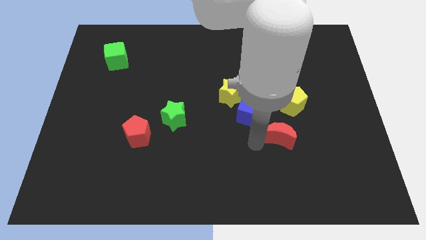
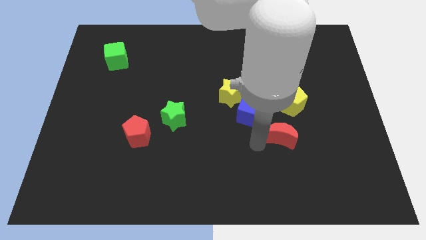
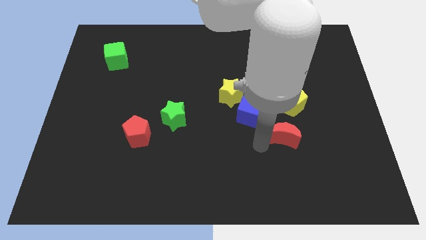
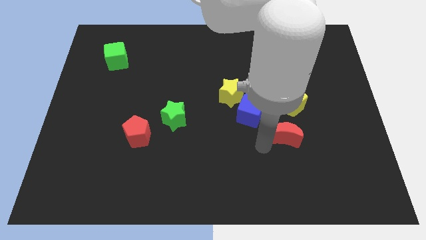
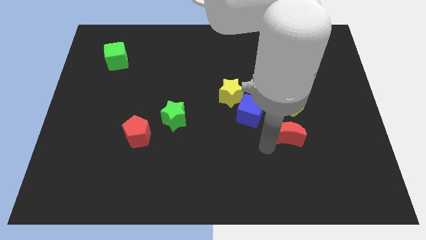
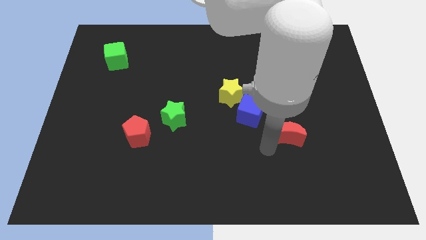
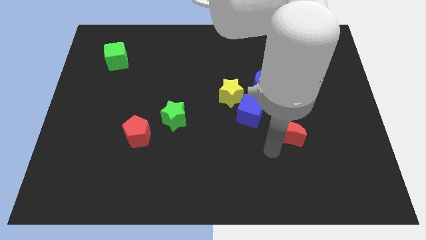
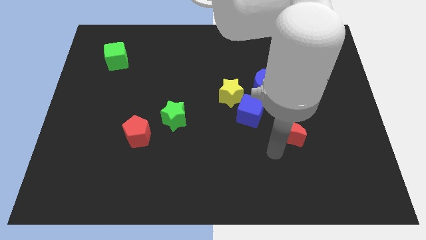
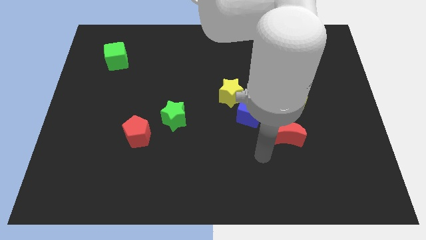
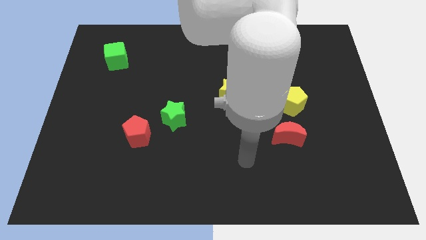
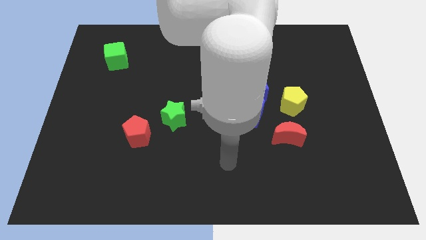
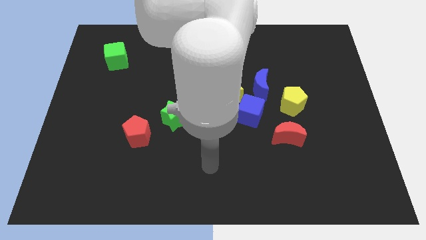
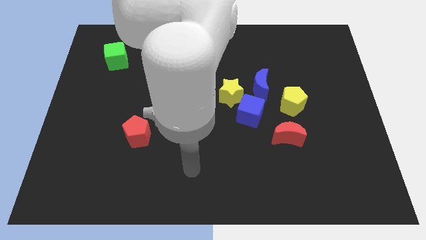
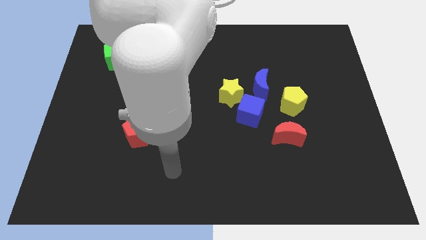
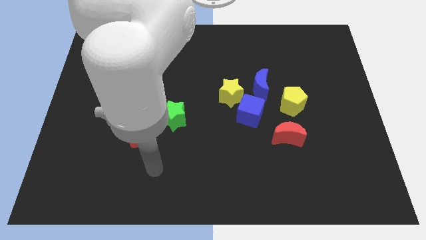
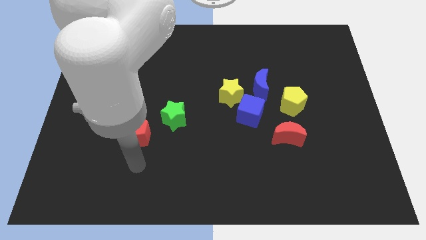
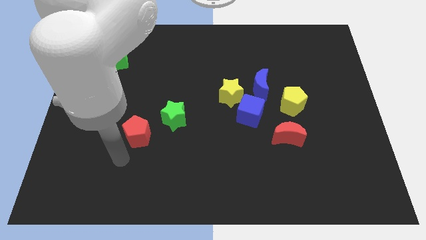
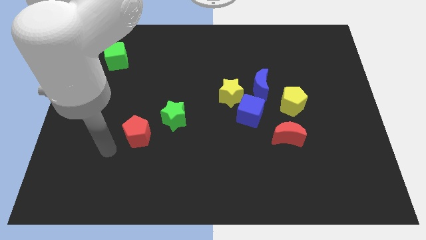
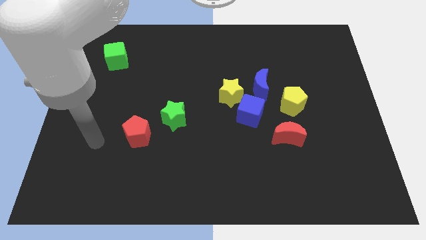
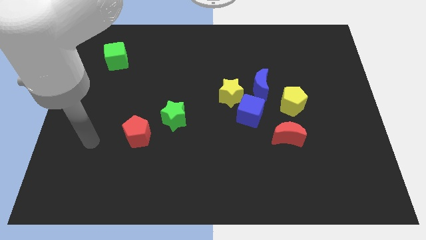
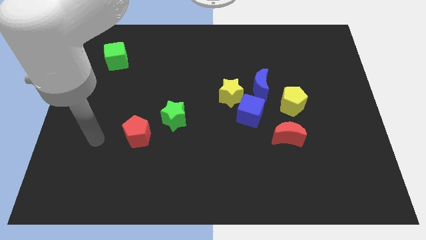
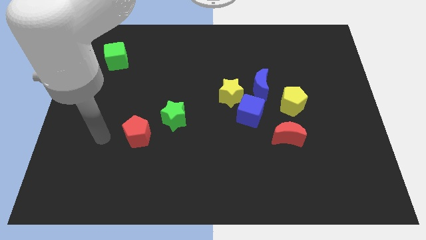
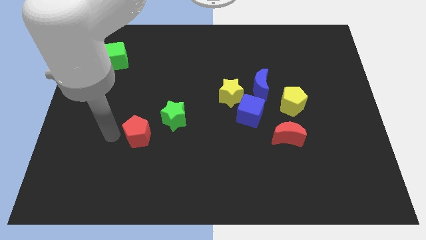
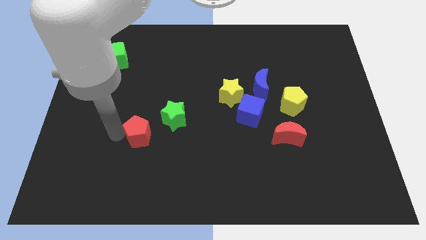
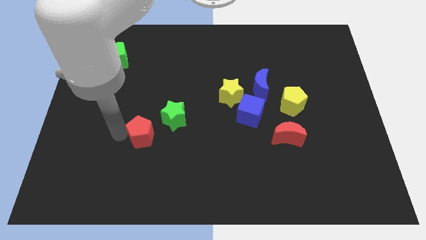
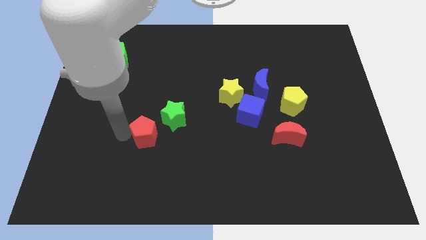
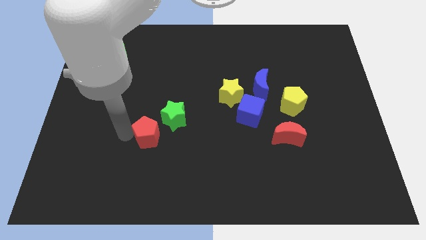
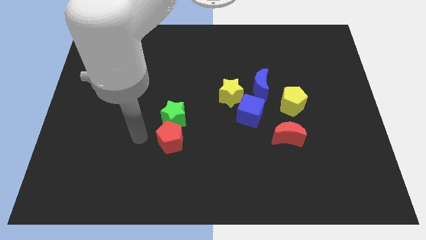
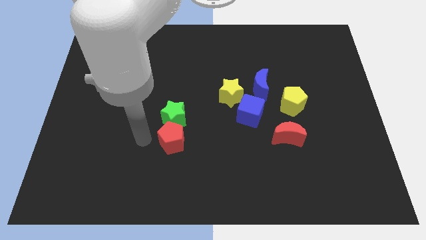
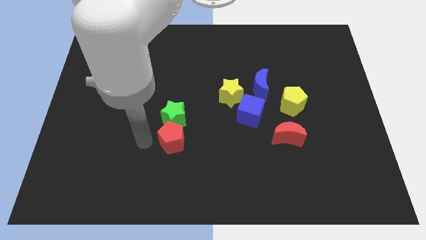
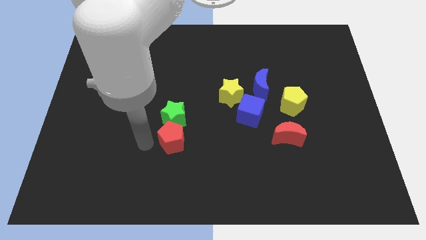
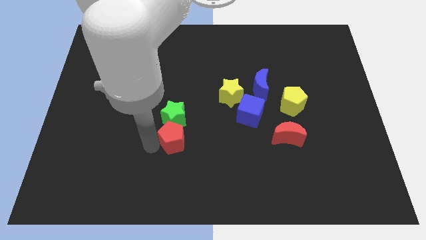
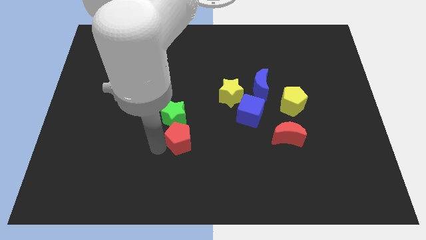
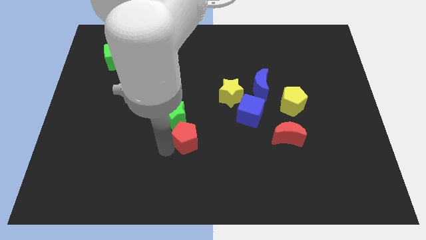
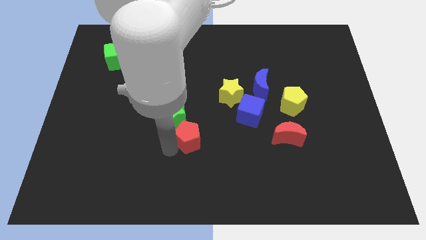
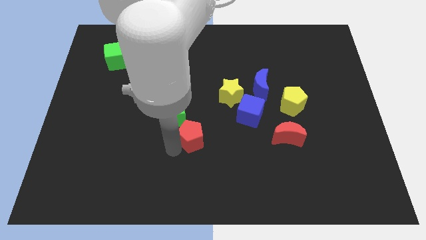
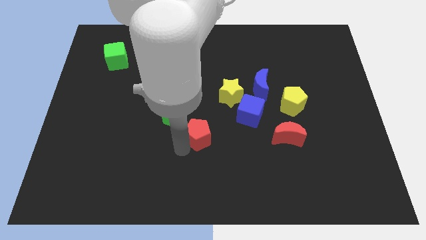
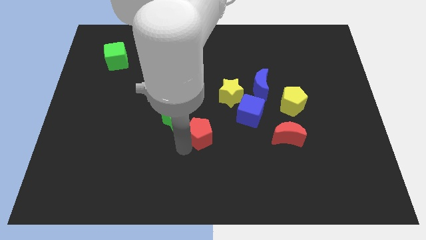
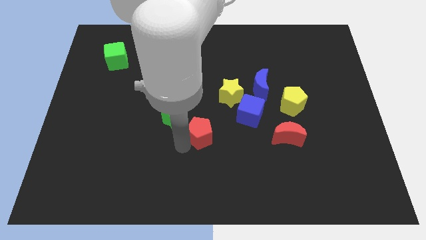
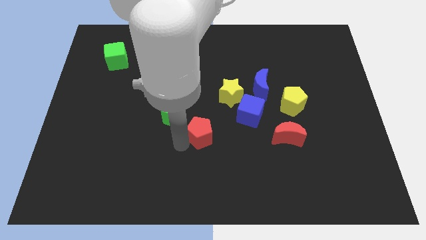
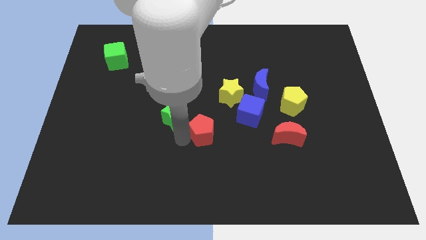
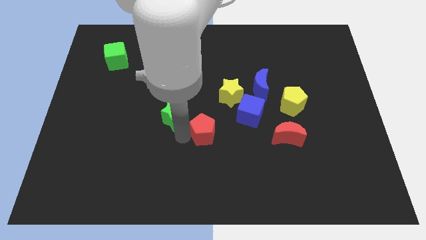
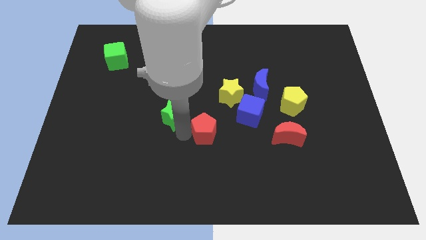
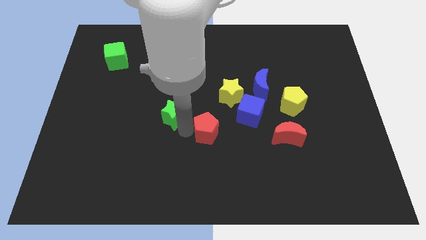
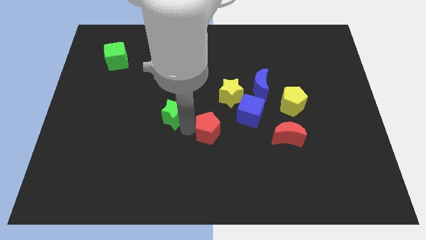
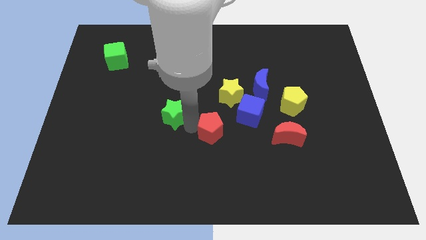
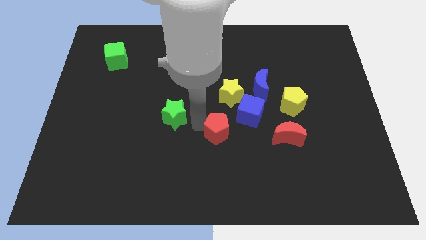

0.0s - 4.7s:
place the red pentagon below the yellow star

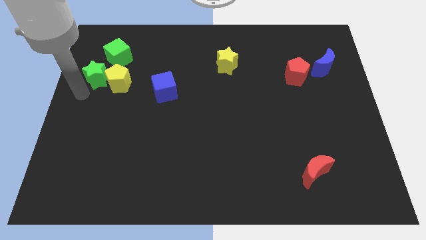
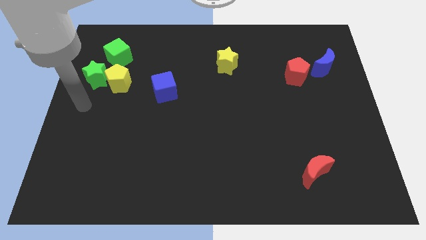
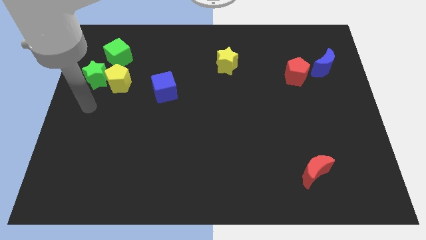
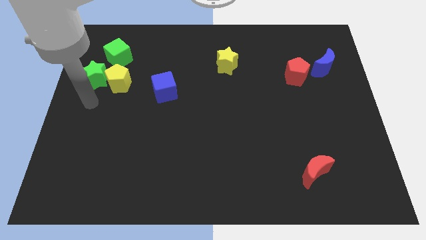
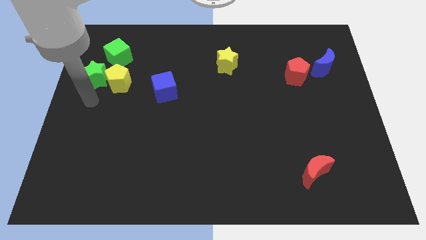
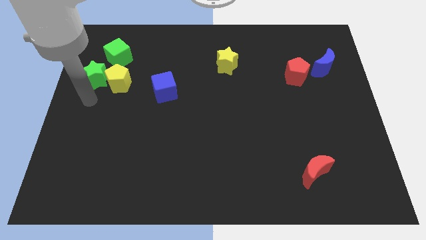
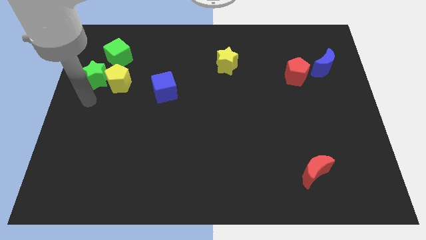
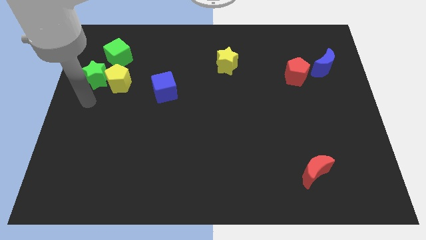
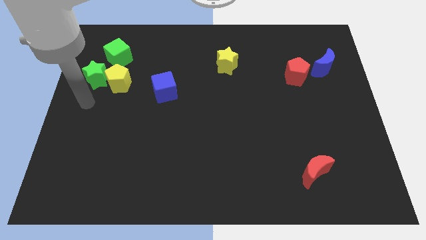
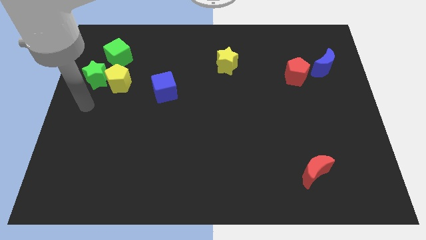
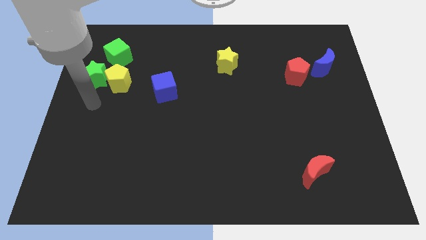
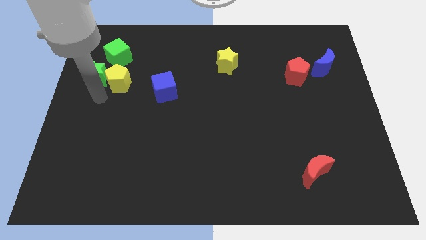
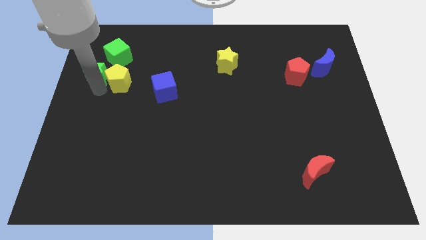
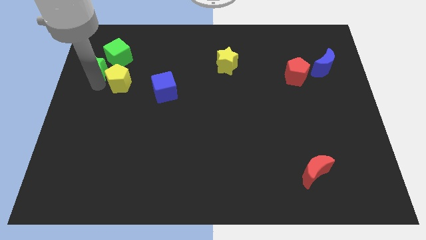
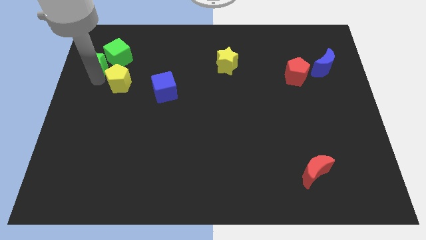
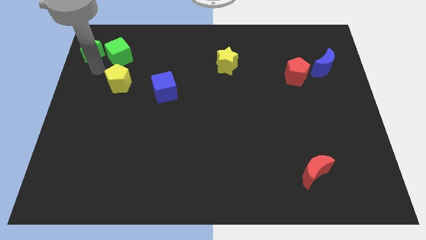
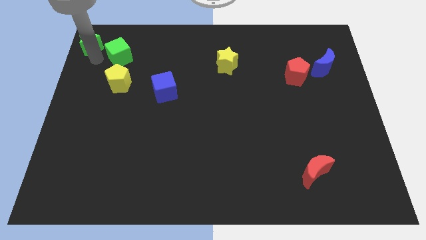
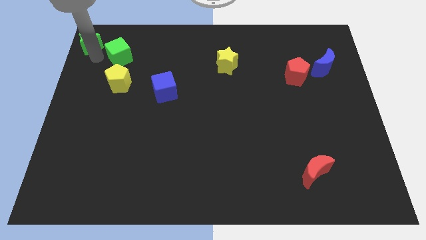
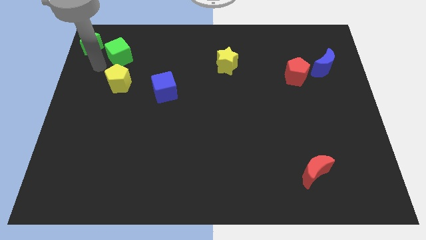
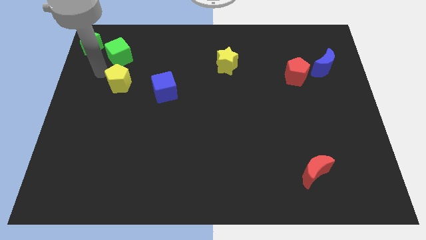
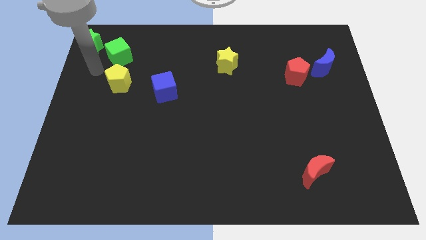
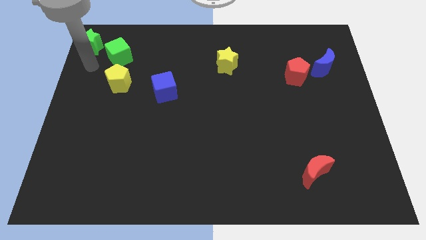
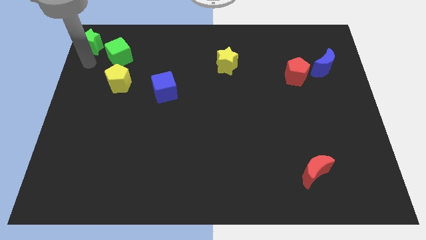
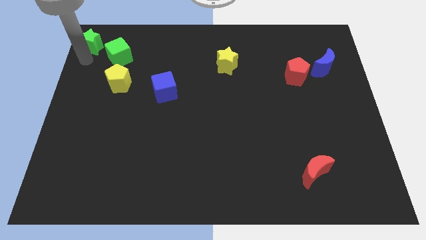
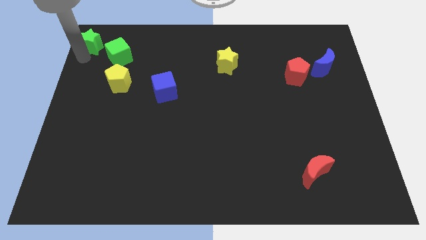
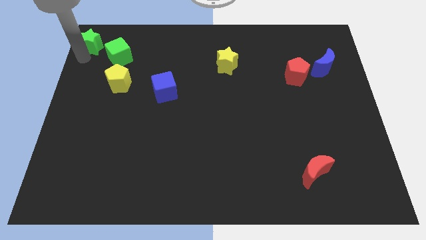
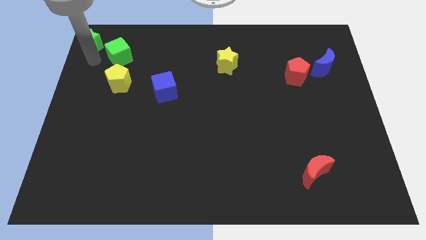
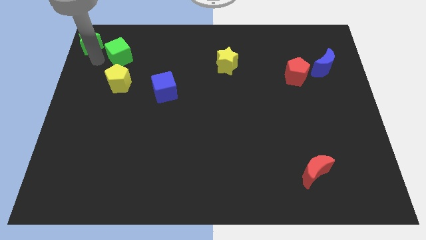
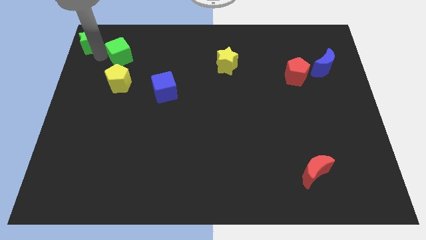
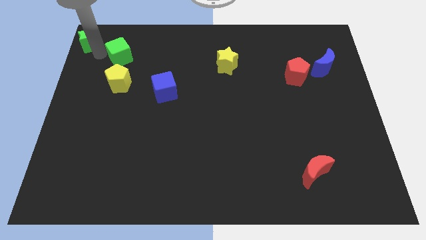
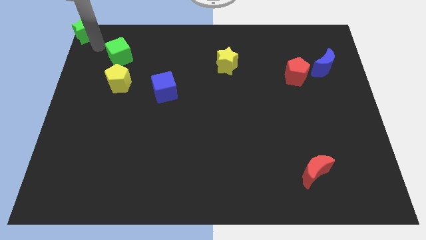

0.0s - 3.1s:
separate green star from yellow pentagon

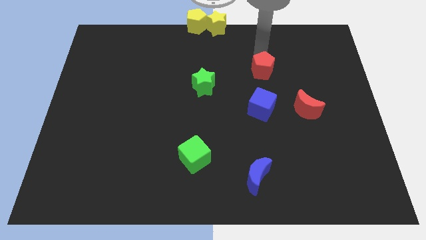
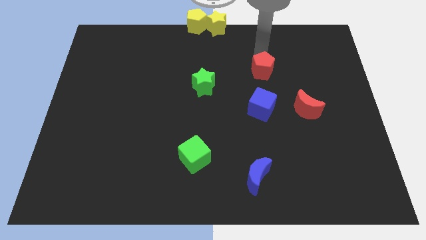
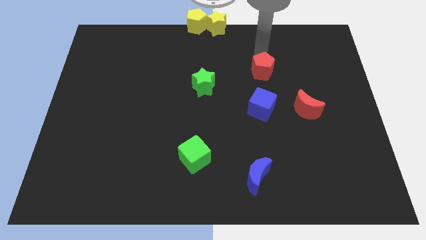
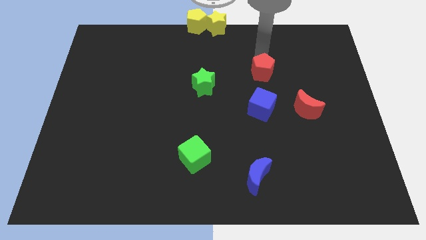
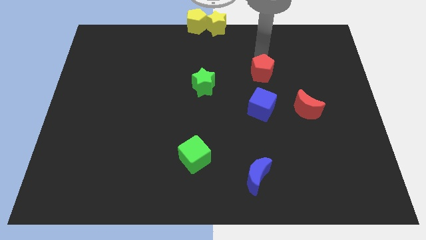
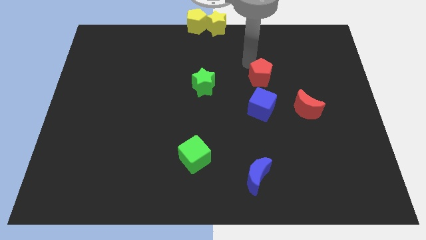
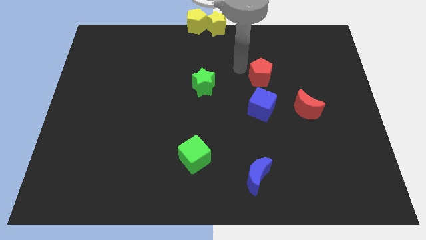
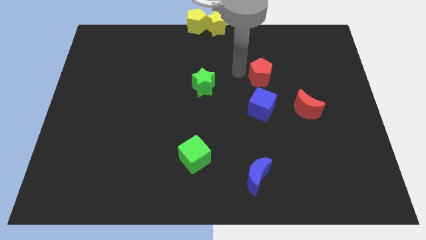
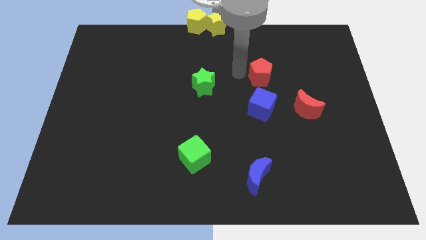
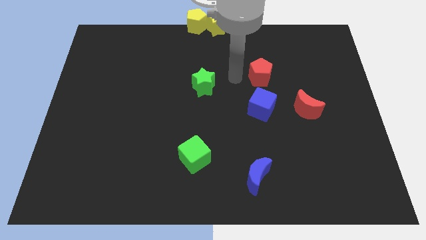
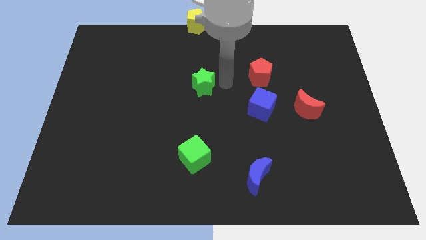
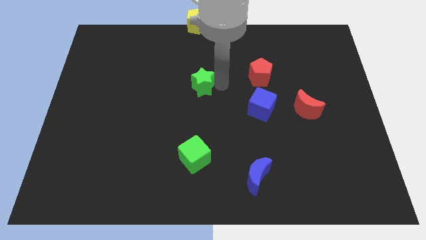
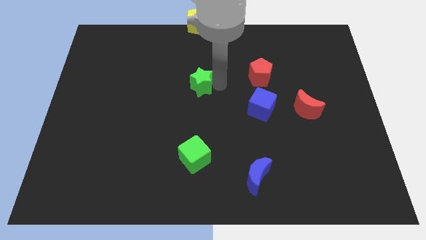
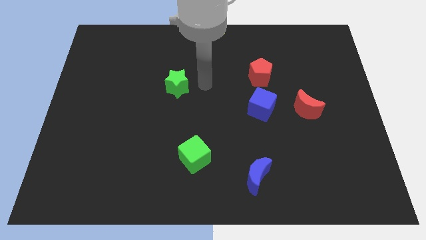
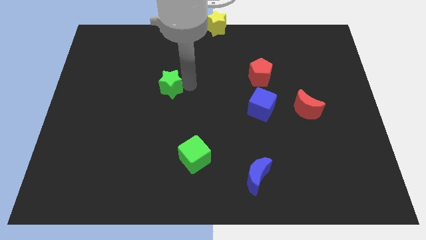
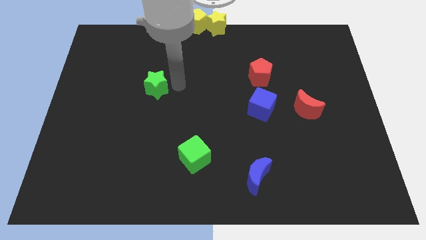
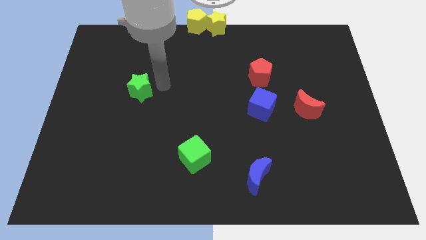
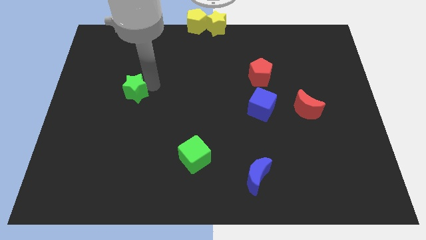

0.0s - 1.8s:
slightly move the green star towards the left
